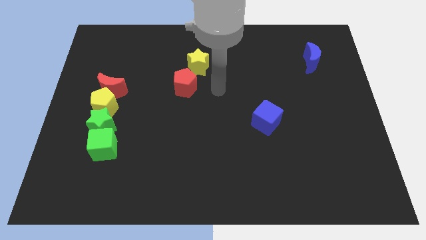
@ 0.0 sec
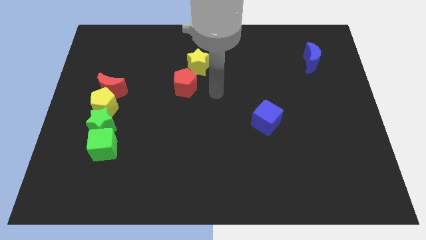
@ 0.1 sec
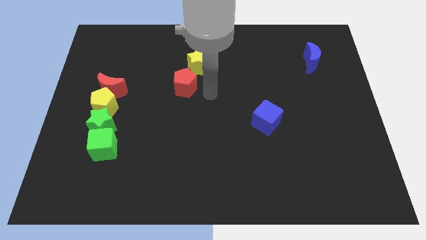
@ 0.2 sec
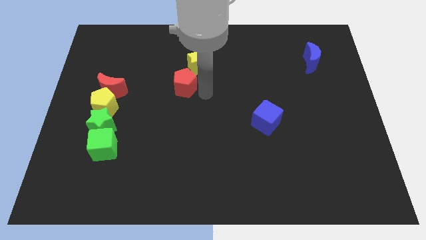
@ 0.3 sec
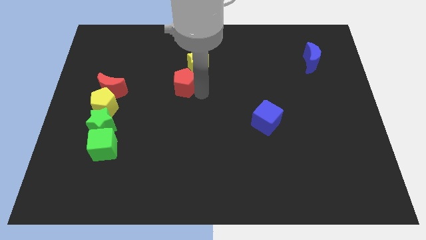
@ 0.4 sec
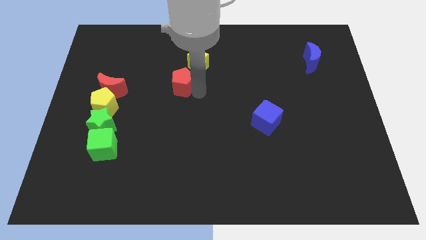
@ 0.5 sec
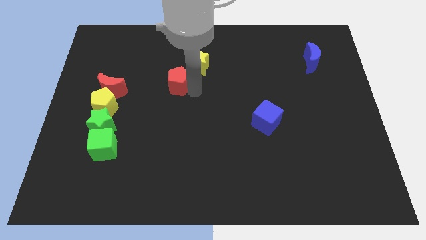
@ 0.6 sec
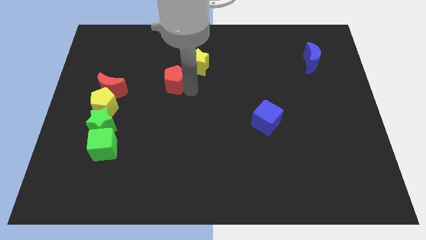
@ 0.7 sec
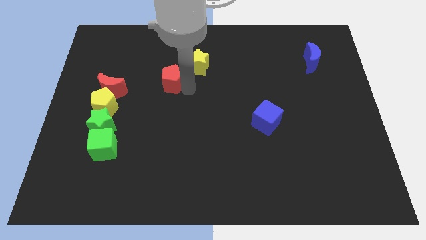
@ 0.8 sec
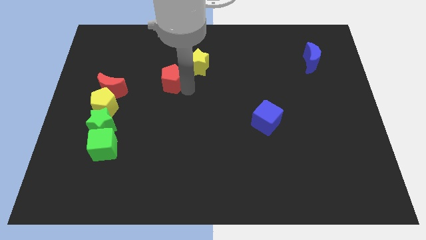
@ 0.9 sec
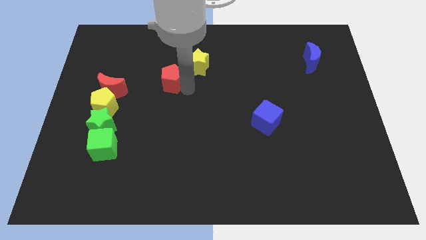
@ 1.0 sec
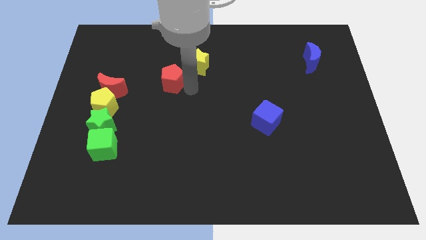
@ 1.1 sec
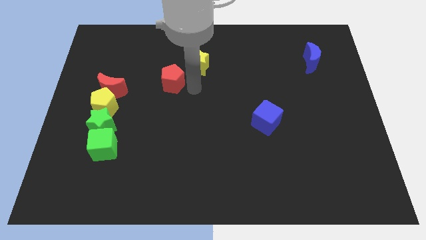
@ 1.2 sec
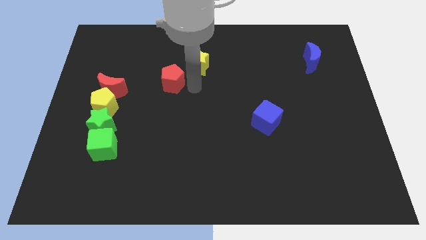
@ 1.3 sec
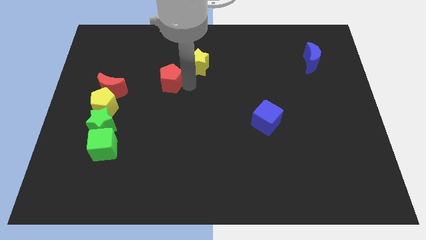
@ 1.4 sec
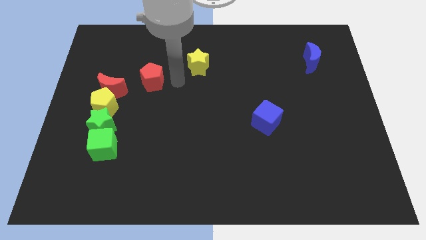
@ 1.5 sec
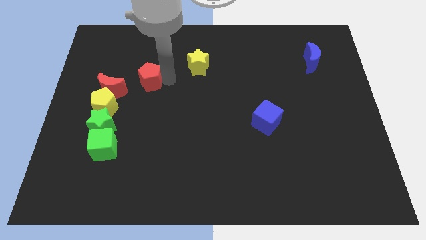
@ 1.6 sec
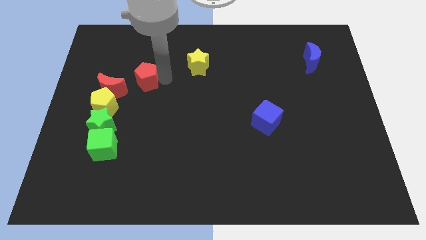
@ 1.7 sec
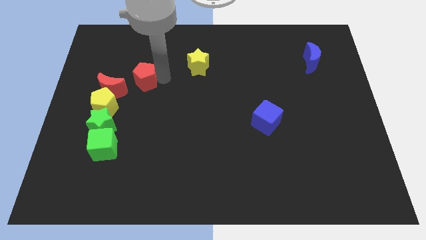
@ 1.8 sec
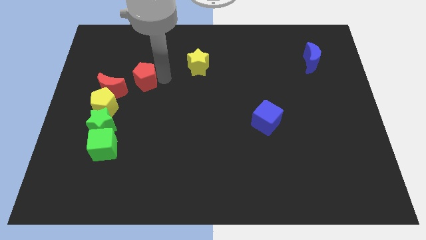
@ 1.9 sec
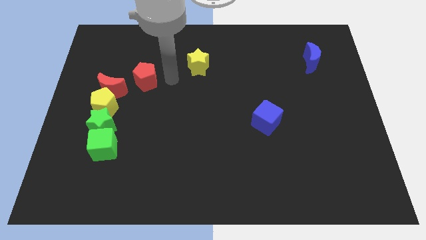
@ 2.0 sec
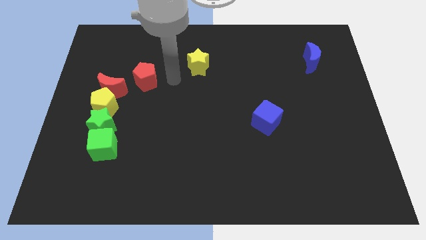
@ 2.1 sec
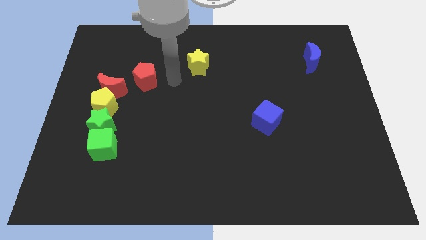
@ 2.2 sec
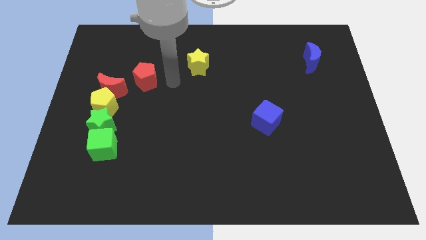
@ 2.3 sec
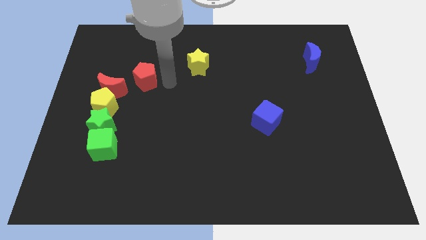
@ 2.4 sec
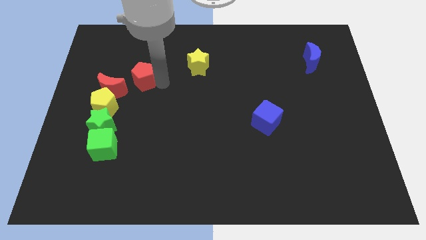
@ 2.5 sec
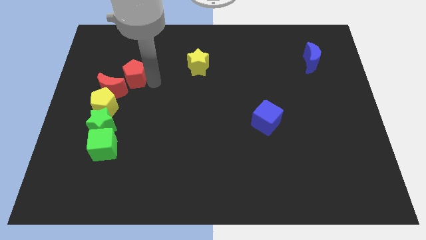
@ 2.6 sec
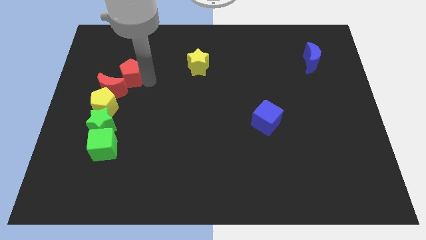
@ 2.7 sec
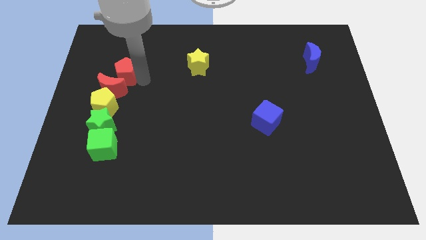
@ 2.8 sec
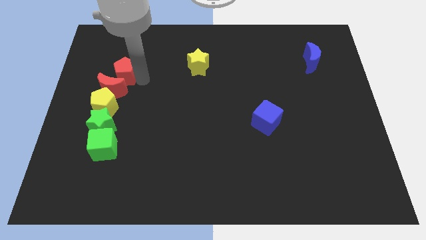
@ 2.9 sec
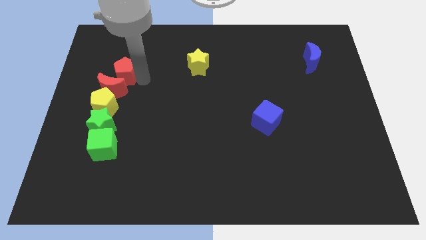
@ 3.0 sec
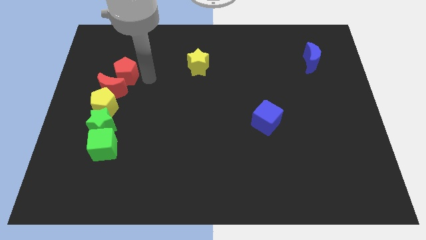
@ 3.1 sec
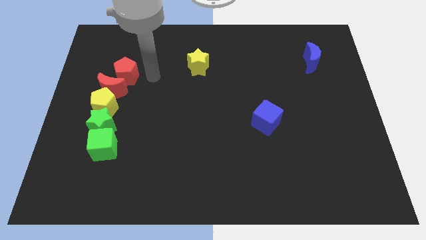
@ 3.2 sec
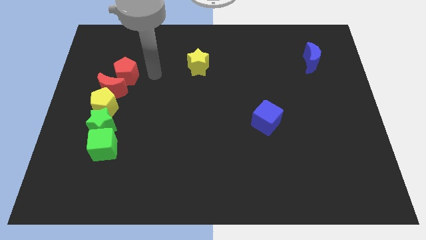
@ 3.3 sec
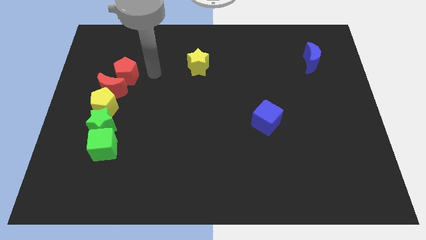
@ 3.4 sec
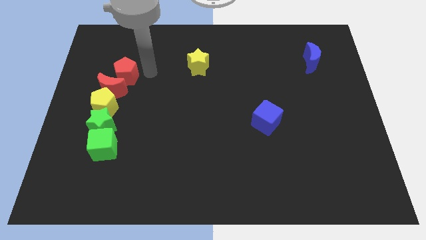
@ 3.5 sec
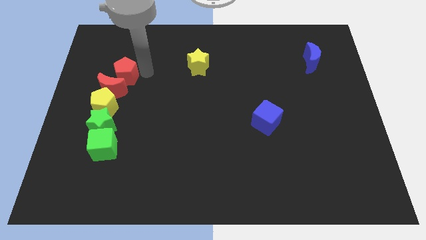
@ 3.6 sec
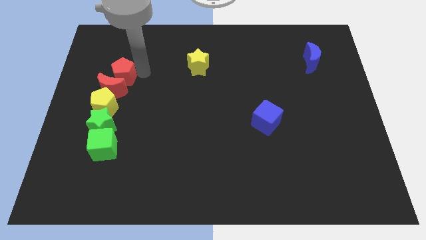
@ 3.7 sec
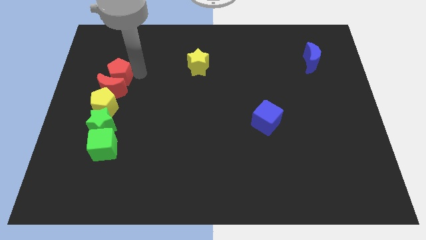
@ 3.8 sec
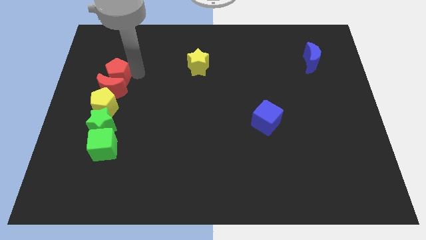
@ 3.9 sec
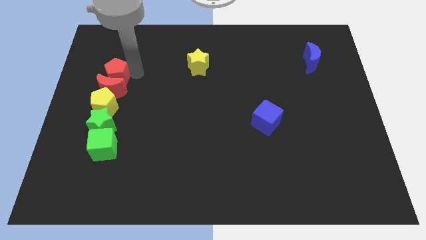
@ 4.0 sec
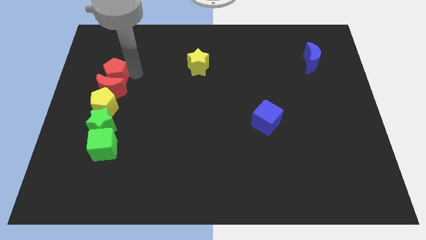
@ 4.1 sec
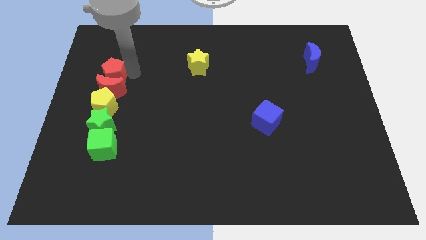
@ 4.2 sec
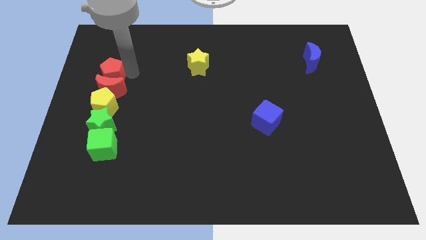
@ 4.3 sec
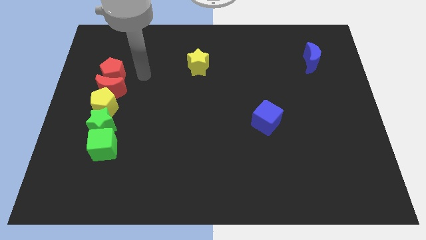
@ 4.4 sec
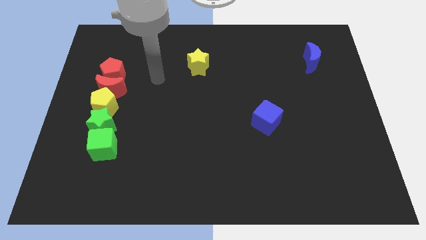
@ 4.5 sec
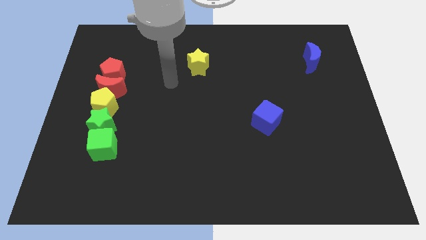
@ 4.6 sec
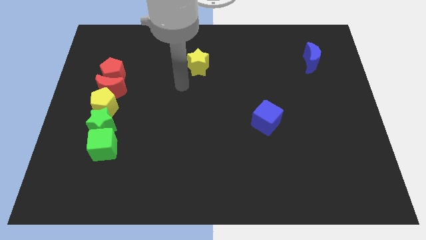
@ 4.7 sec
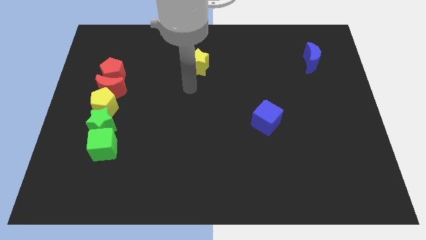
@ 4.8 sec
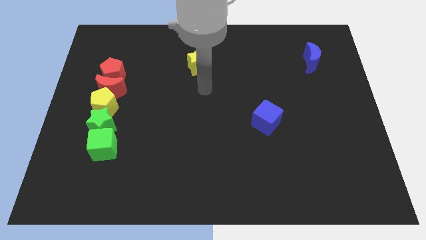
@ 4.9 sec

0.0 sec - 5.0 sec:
drag the red pentagon and place it above the red moon

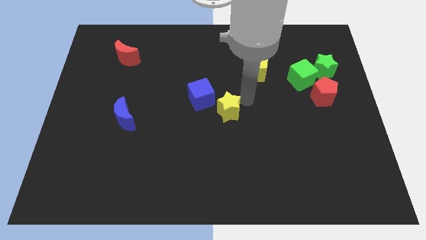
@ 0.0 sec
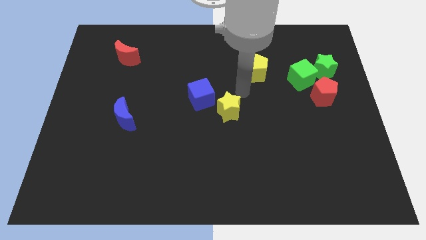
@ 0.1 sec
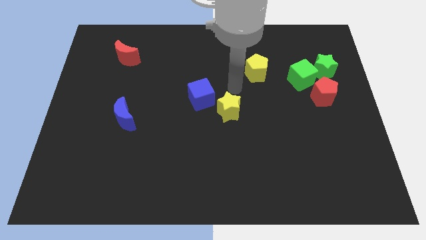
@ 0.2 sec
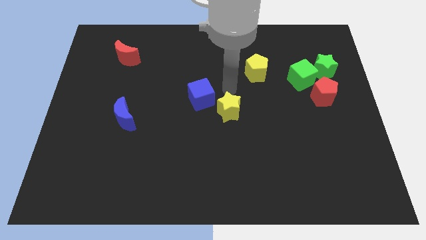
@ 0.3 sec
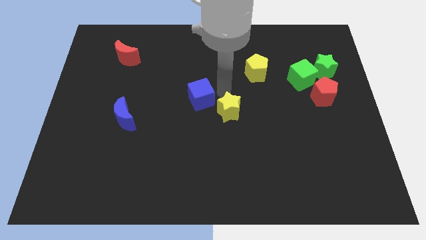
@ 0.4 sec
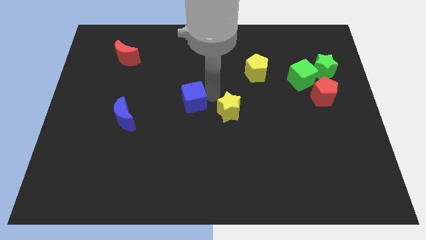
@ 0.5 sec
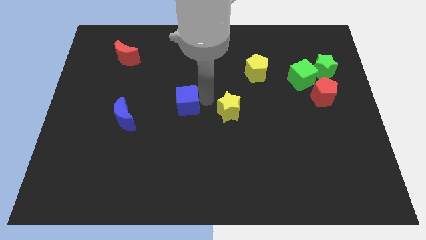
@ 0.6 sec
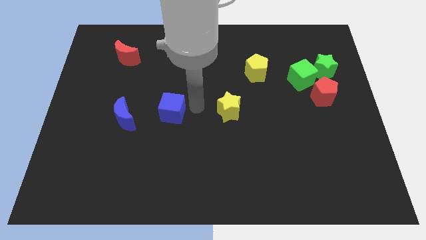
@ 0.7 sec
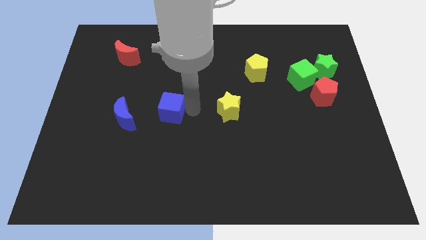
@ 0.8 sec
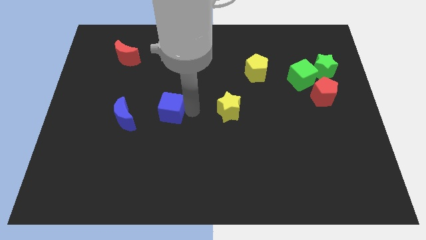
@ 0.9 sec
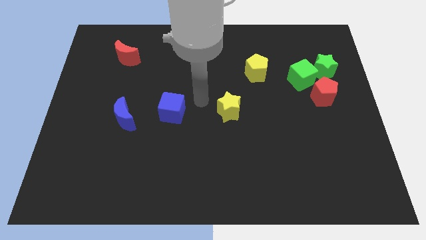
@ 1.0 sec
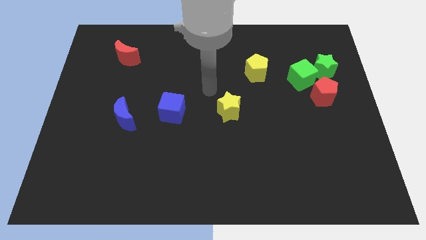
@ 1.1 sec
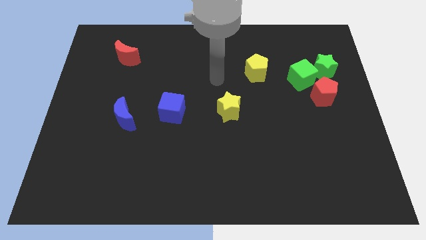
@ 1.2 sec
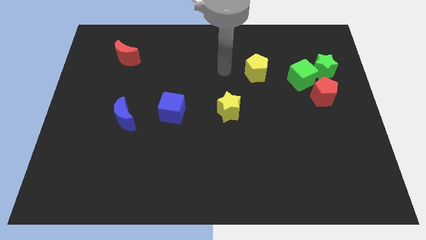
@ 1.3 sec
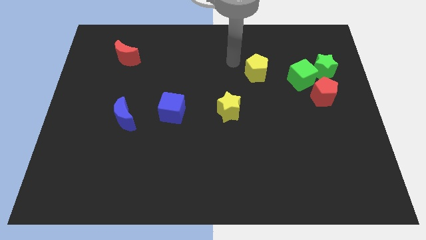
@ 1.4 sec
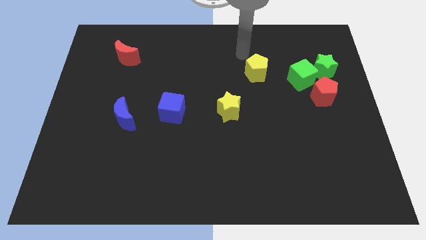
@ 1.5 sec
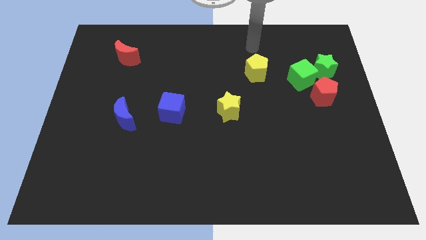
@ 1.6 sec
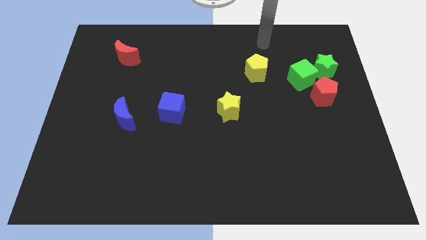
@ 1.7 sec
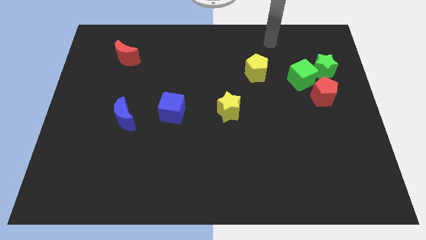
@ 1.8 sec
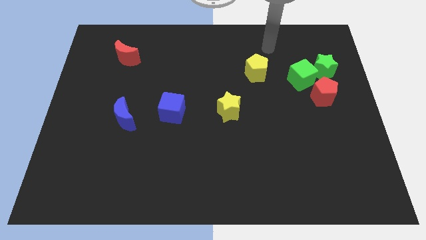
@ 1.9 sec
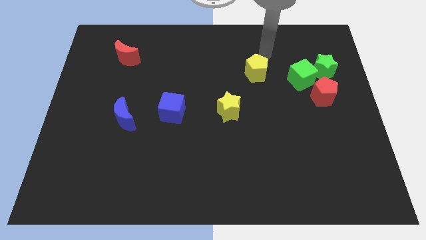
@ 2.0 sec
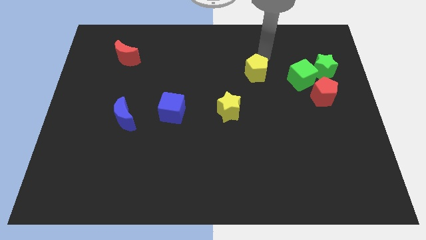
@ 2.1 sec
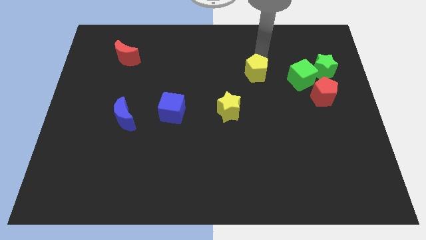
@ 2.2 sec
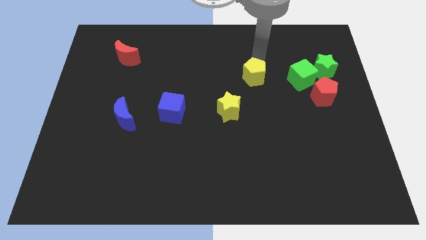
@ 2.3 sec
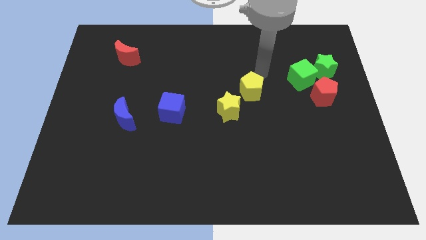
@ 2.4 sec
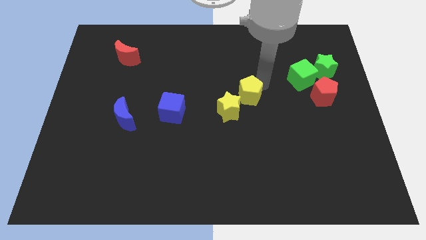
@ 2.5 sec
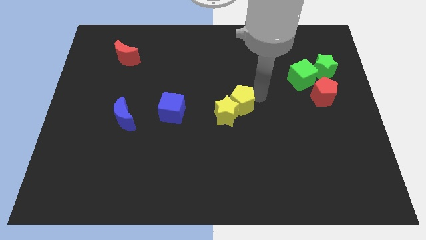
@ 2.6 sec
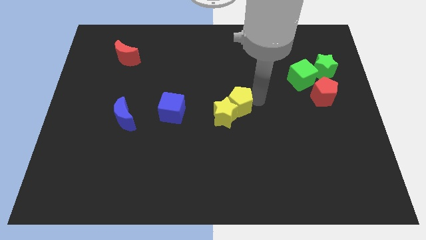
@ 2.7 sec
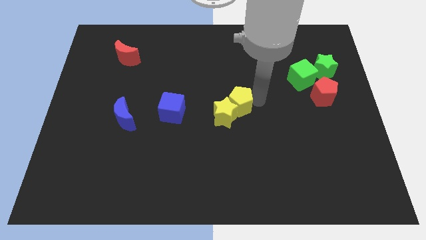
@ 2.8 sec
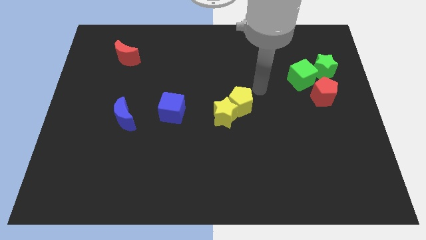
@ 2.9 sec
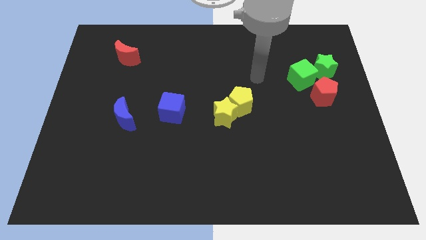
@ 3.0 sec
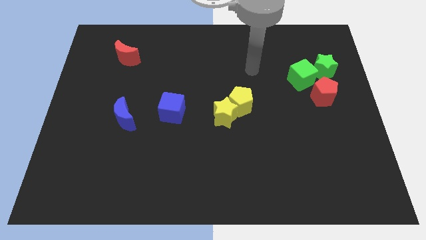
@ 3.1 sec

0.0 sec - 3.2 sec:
push the blue cube towards the blue crescent and go away

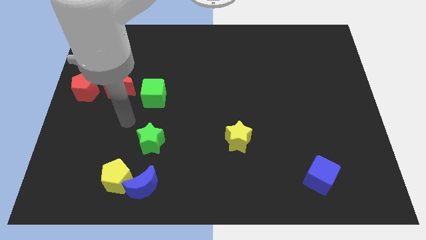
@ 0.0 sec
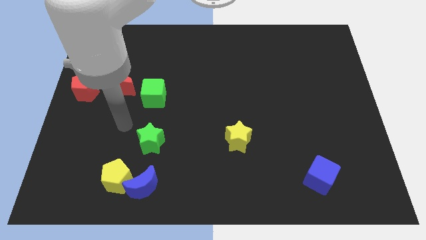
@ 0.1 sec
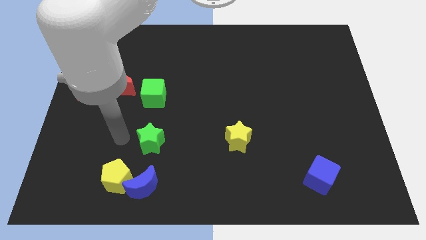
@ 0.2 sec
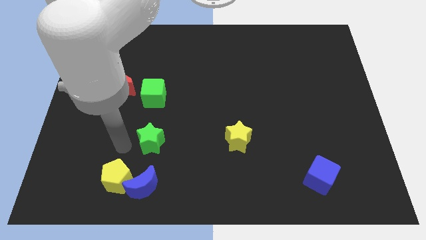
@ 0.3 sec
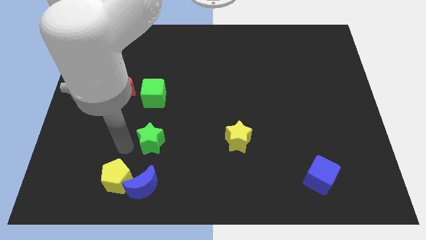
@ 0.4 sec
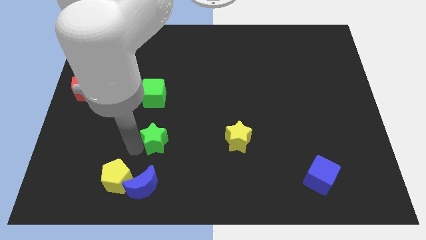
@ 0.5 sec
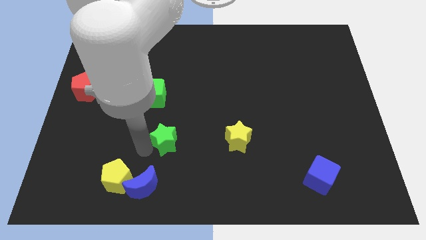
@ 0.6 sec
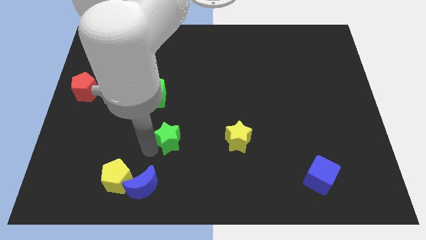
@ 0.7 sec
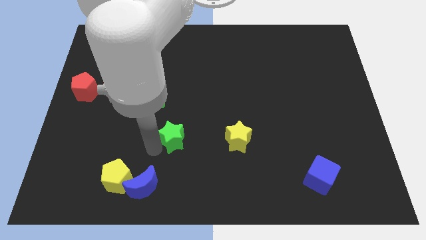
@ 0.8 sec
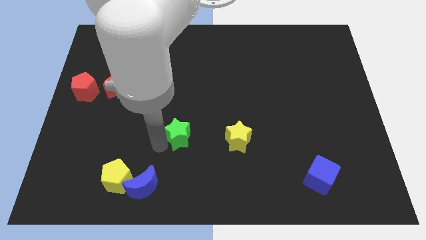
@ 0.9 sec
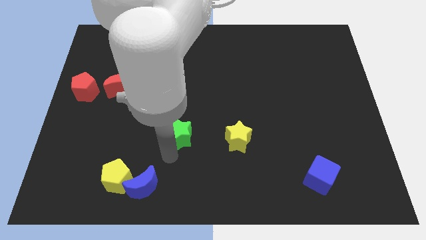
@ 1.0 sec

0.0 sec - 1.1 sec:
push the green star to the bottom right of the green cube
